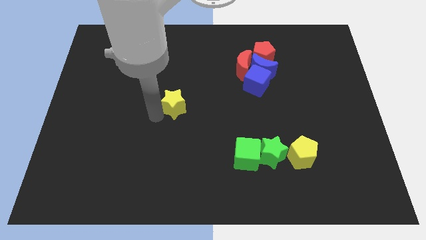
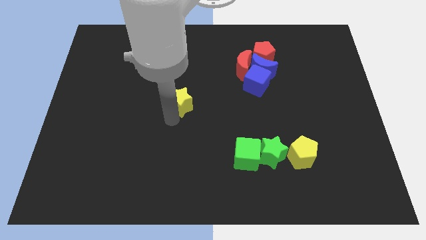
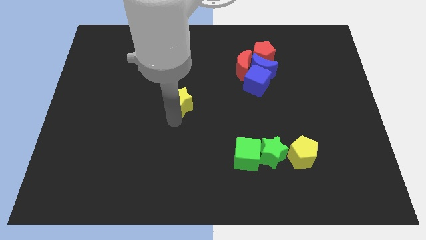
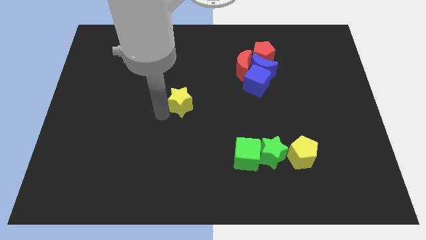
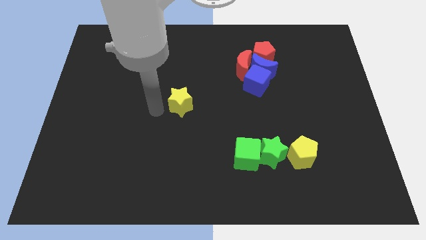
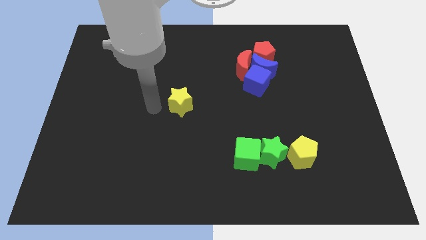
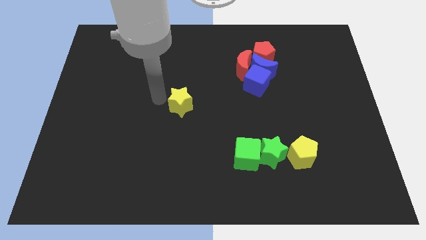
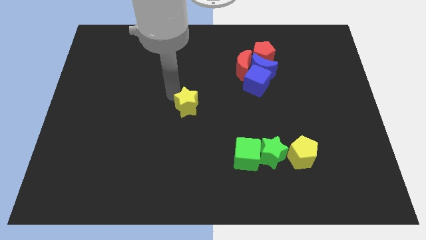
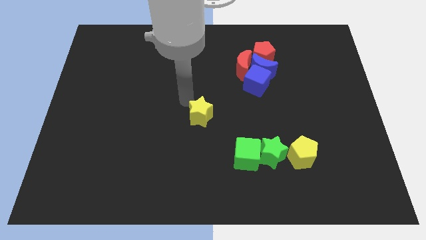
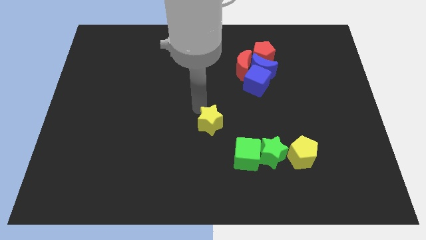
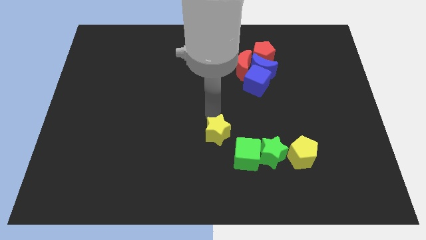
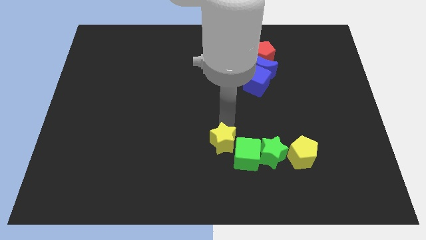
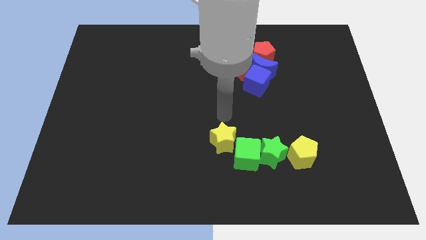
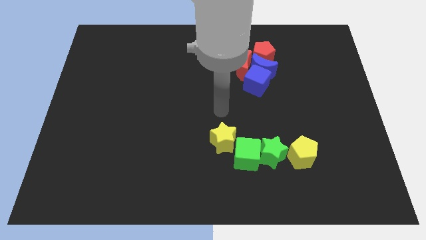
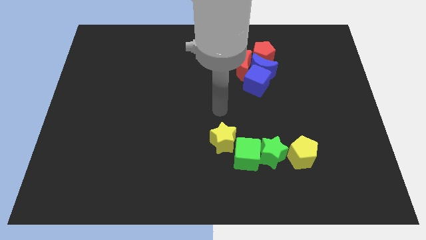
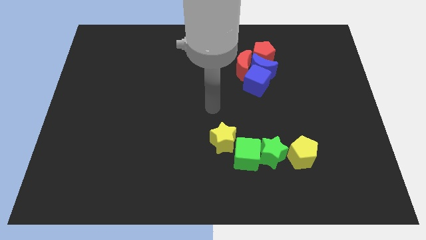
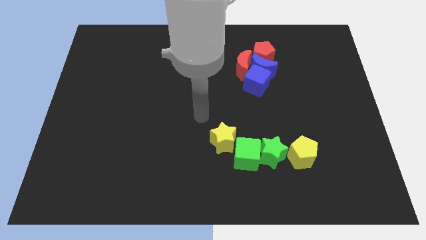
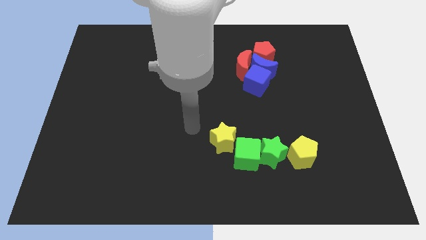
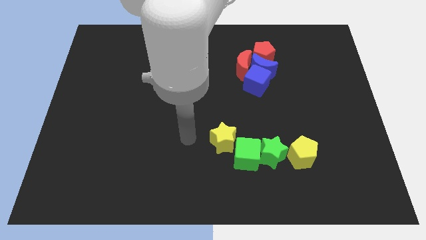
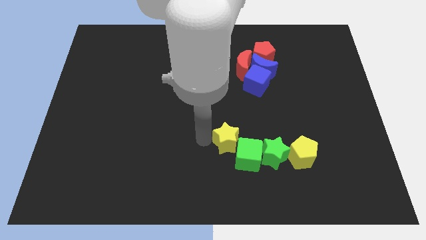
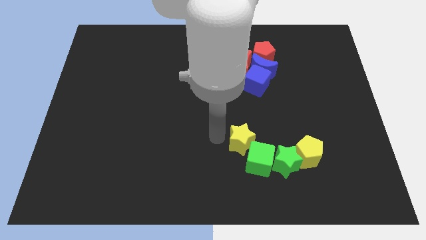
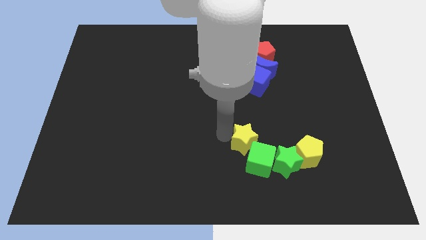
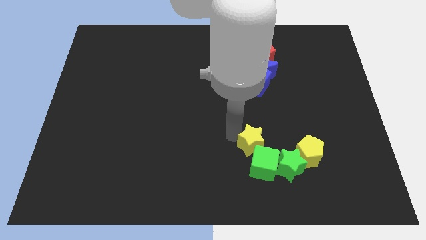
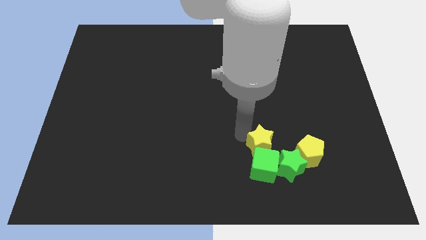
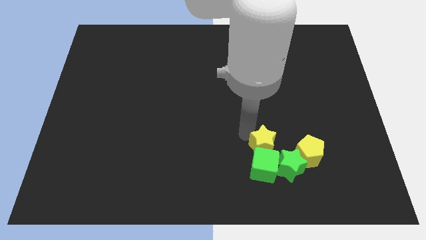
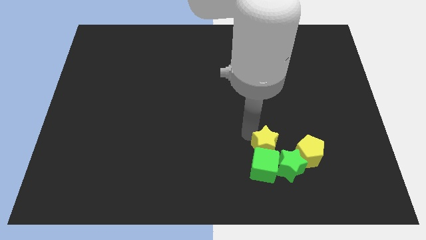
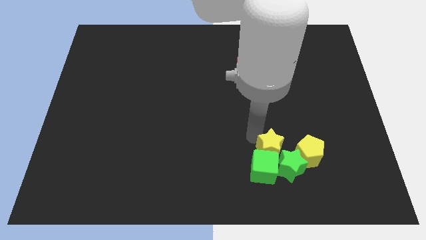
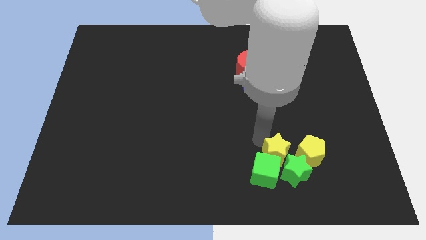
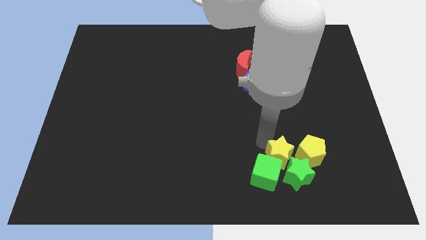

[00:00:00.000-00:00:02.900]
move the yellow star into the green star and green cube

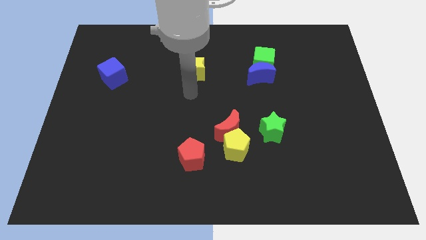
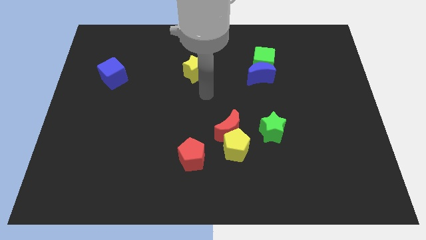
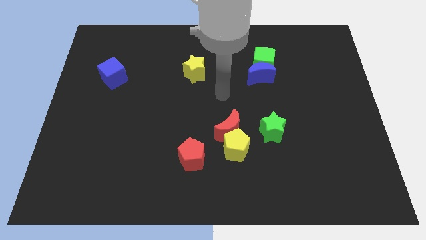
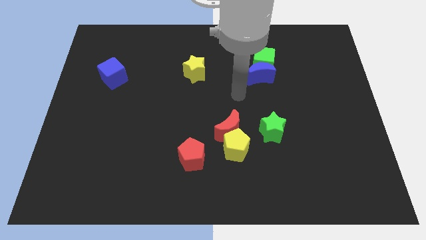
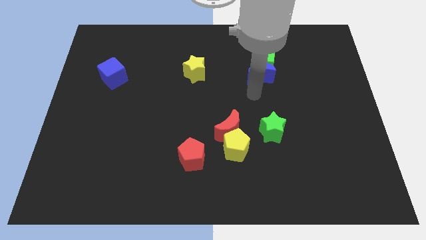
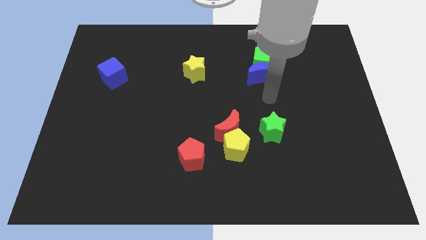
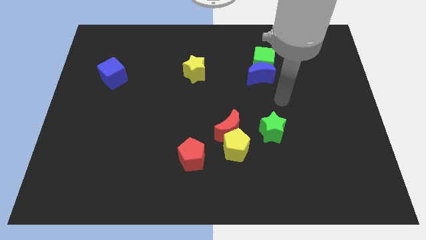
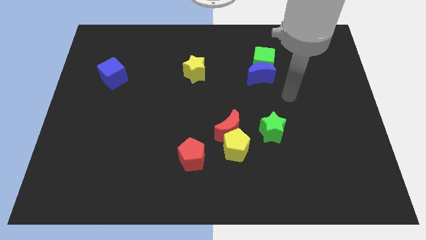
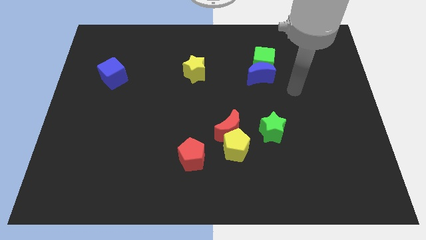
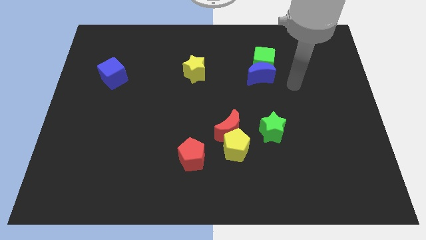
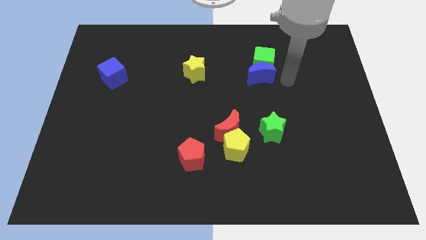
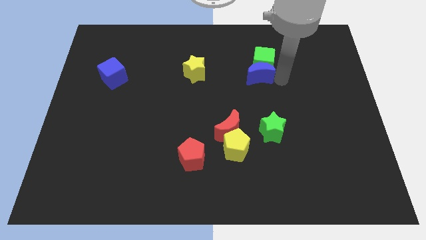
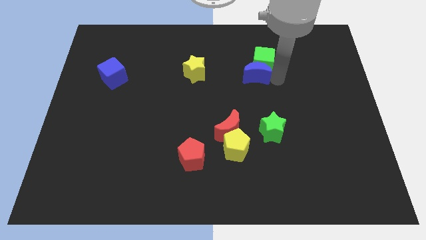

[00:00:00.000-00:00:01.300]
tap the right side of the blue crescent

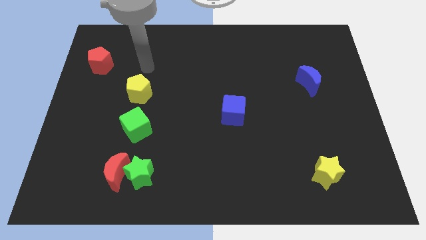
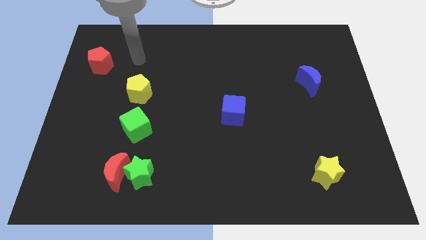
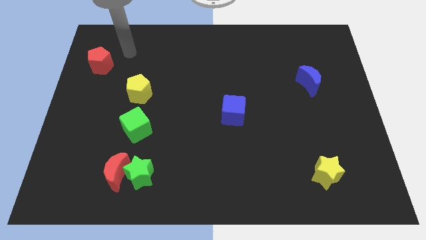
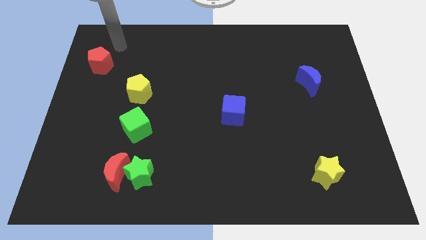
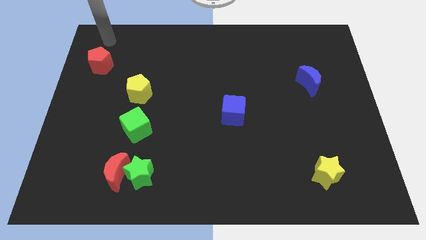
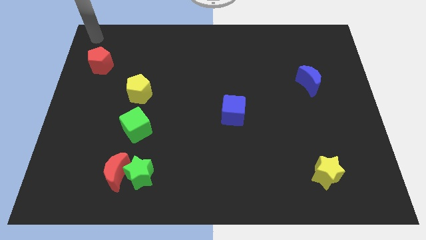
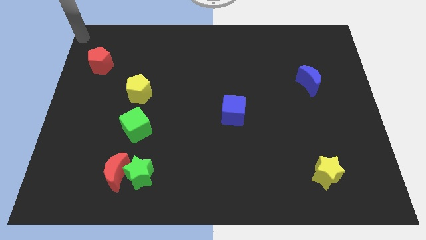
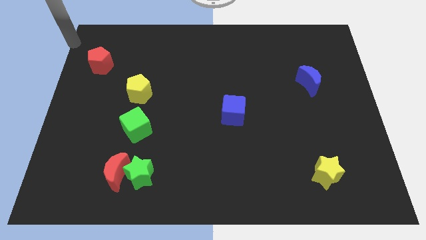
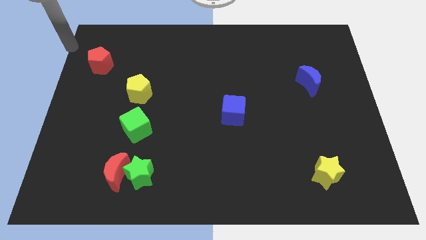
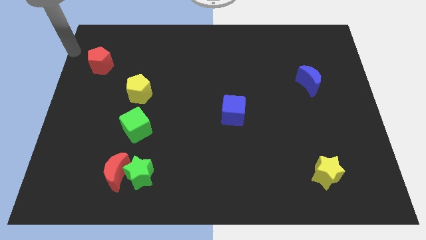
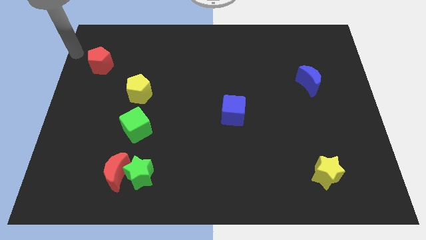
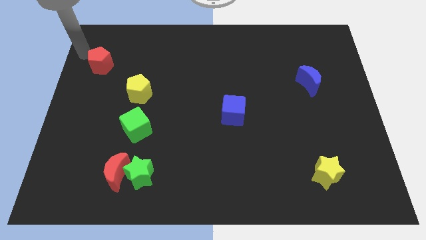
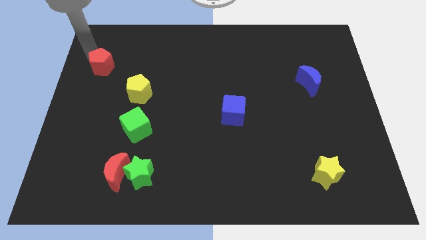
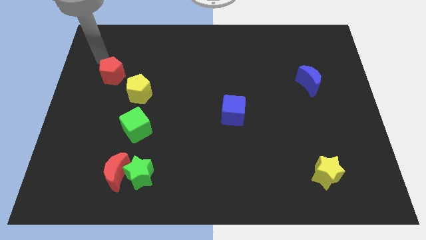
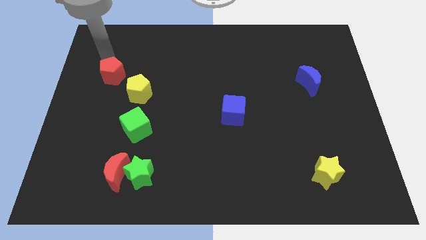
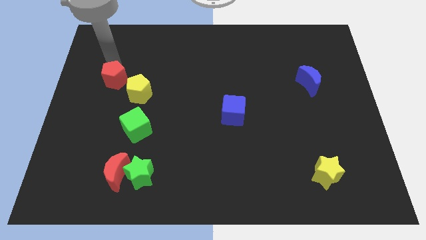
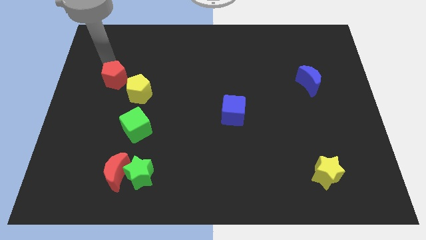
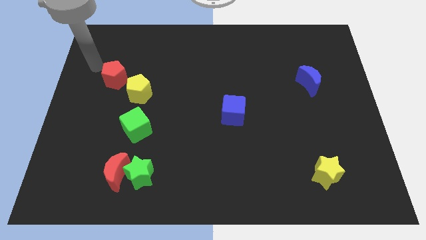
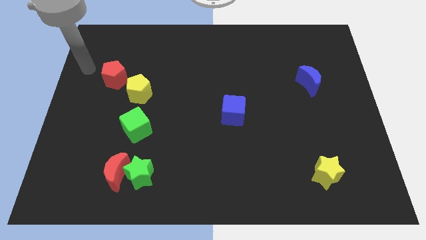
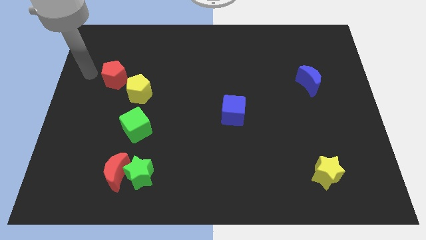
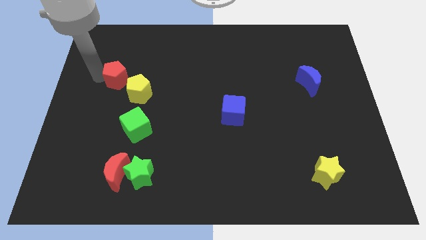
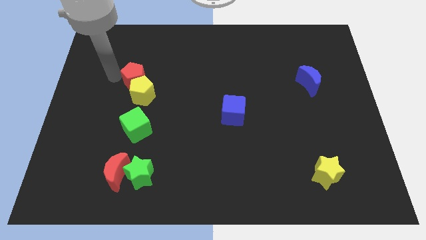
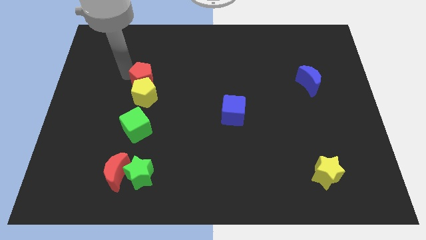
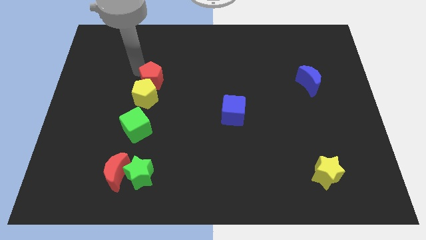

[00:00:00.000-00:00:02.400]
push the red pentagon to the top of the yellow pentagon

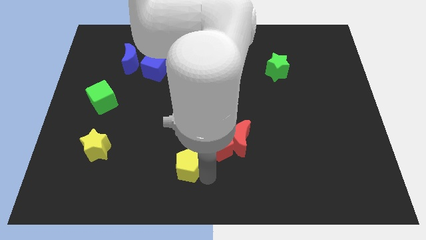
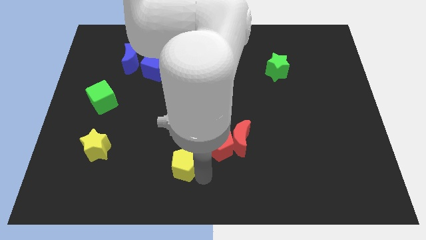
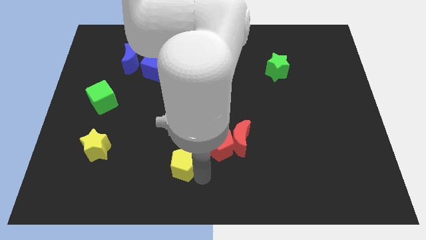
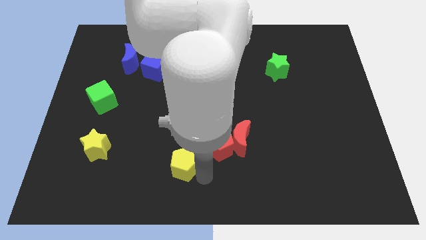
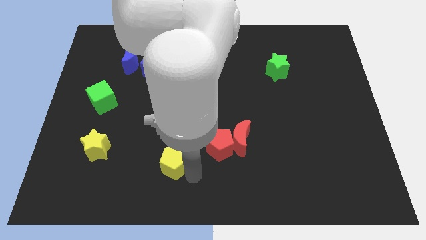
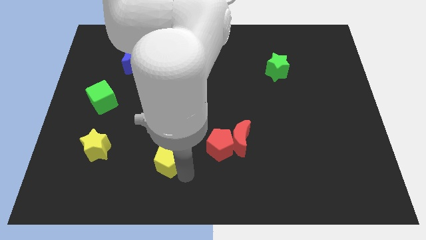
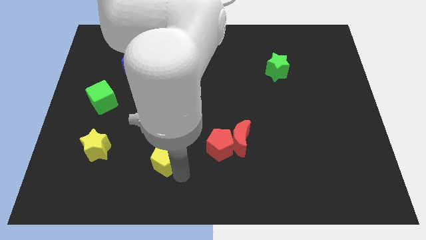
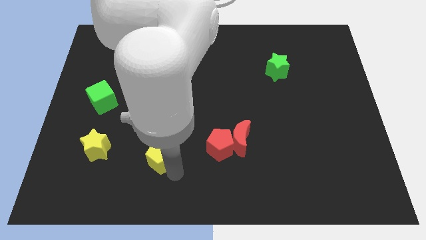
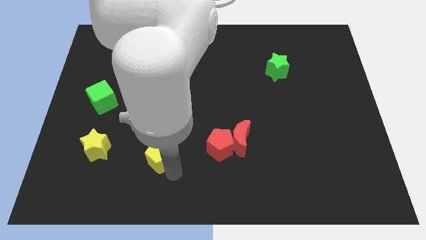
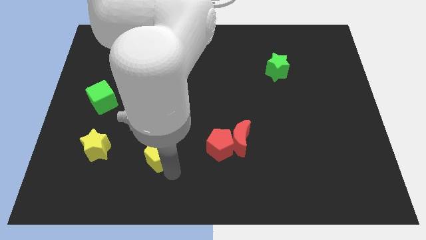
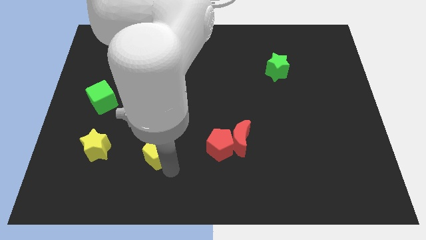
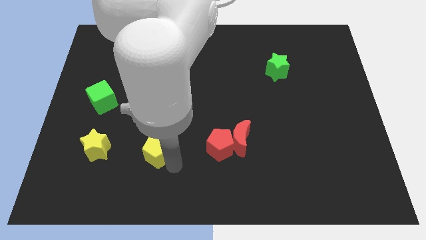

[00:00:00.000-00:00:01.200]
push the yellow pentagon to the right of the yellow star

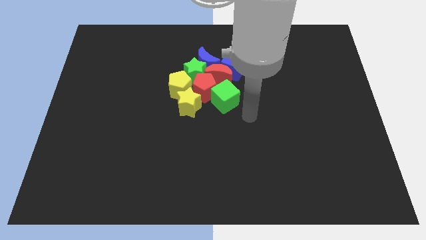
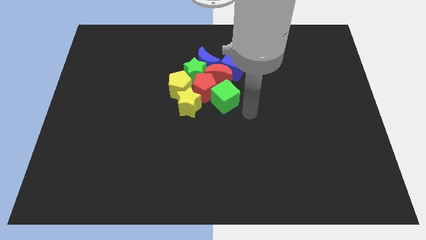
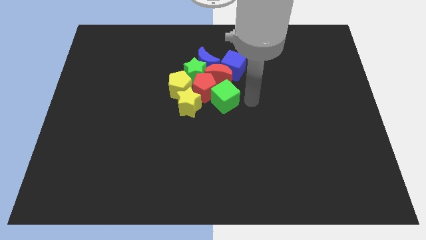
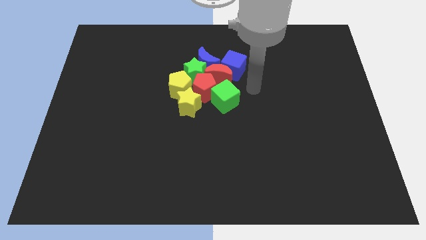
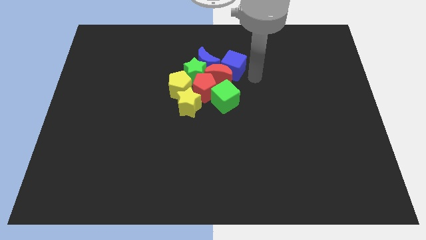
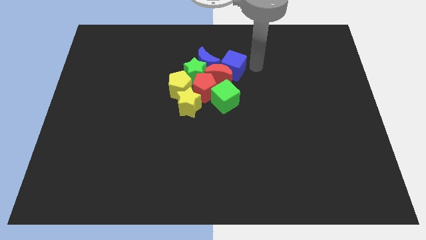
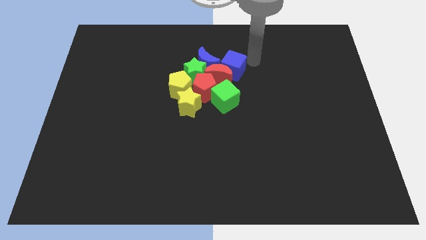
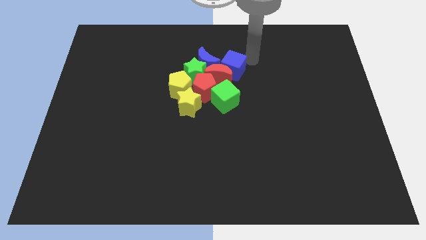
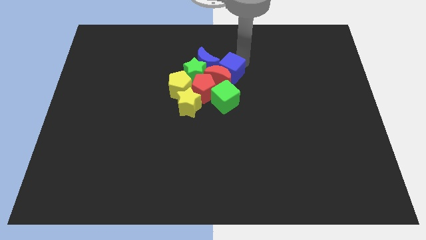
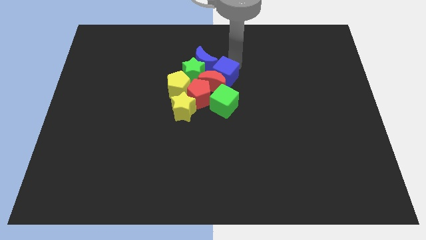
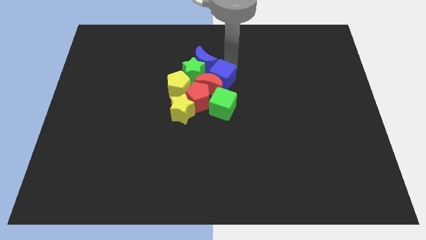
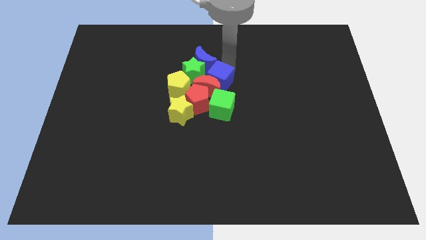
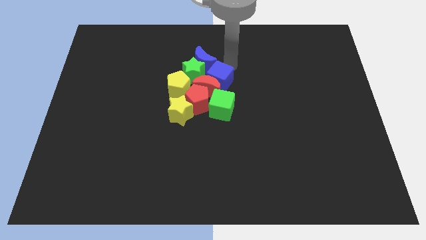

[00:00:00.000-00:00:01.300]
push the blue cube into the red crescent
